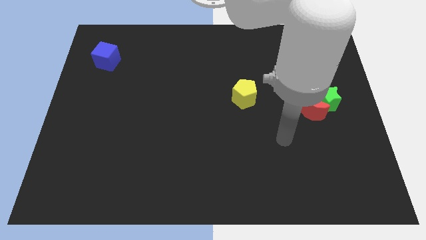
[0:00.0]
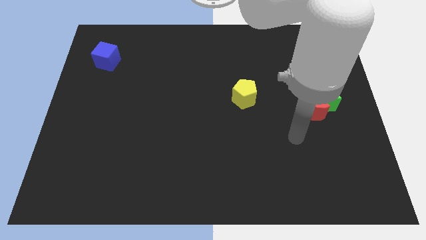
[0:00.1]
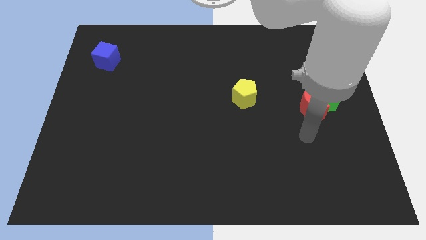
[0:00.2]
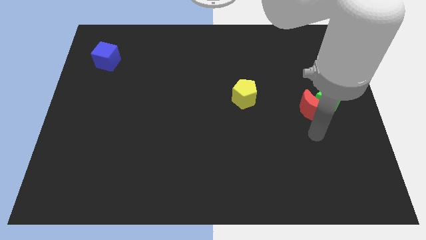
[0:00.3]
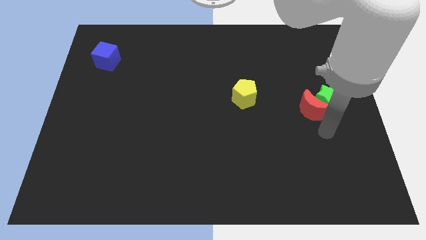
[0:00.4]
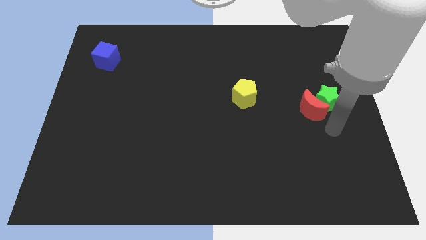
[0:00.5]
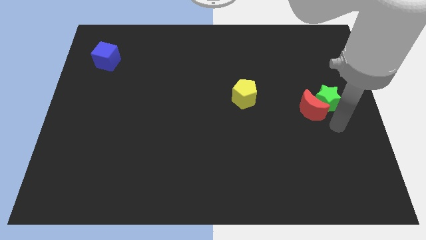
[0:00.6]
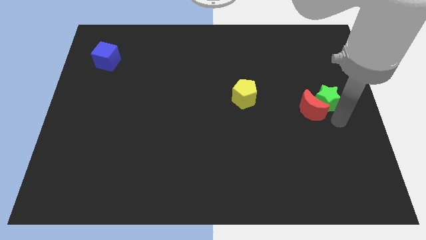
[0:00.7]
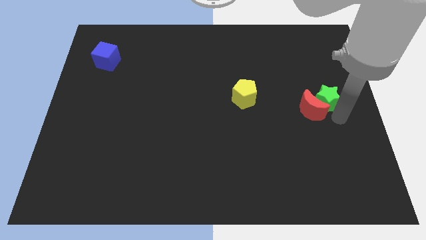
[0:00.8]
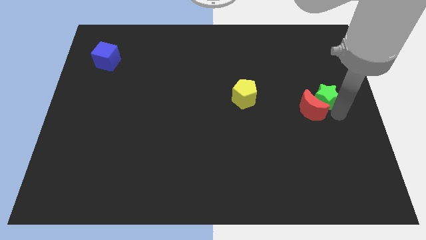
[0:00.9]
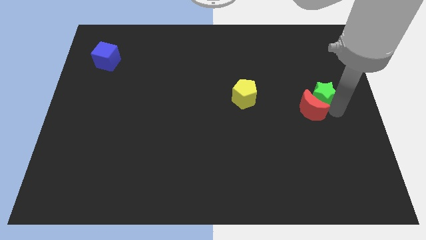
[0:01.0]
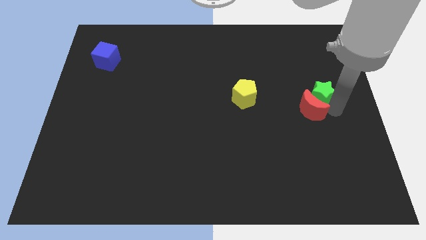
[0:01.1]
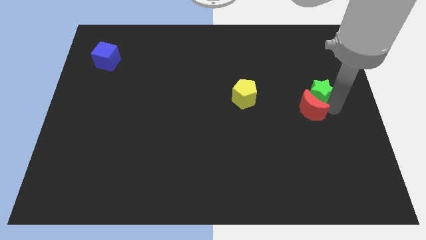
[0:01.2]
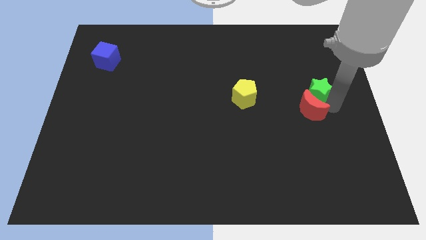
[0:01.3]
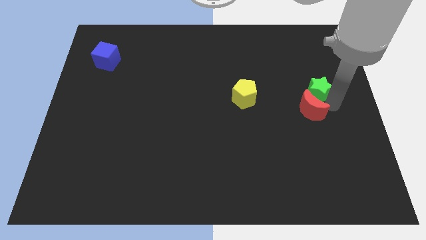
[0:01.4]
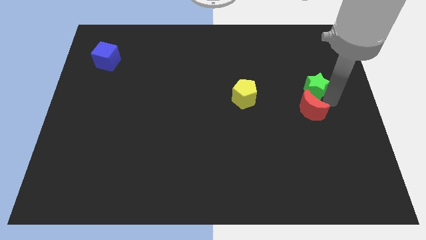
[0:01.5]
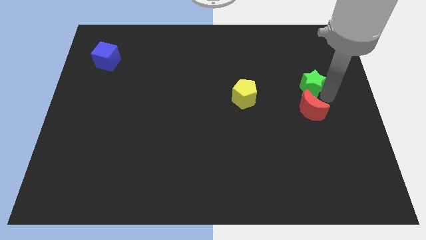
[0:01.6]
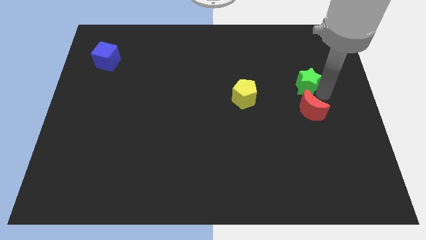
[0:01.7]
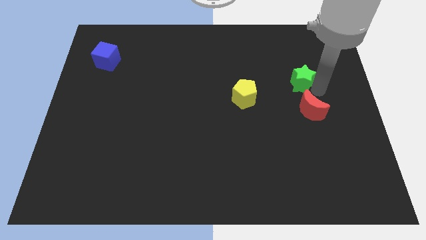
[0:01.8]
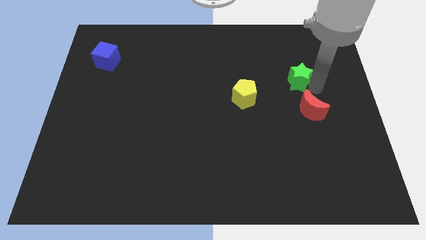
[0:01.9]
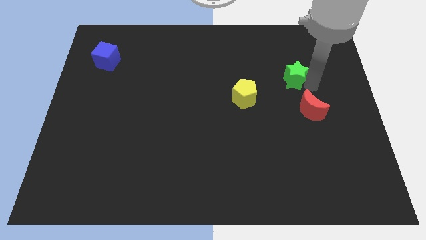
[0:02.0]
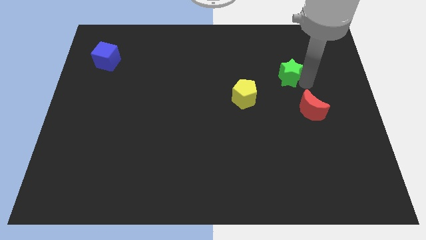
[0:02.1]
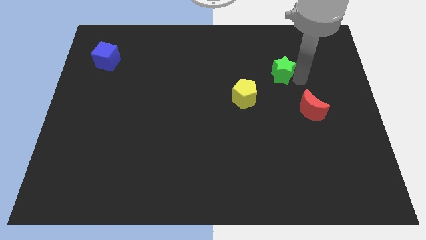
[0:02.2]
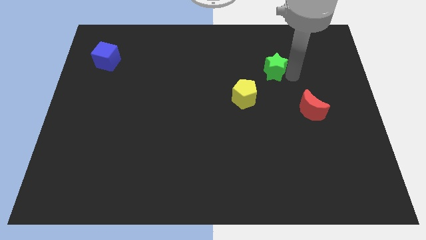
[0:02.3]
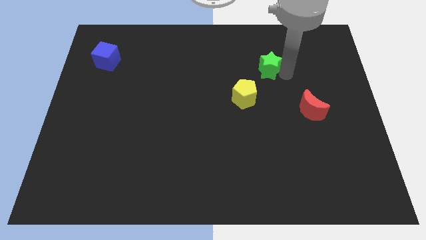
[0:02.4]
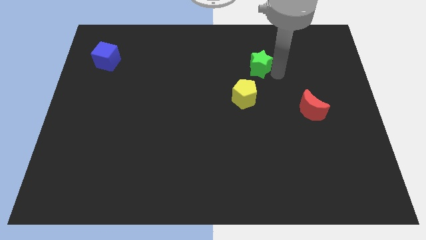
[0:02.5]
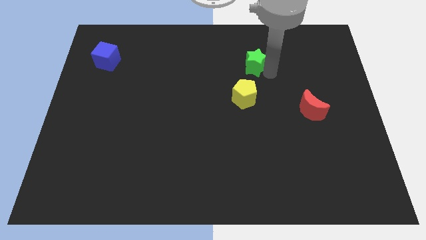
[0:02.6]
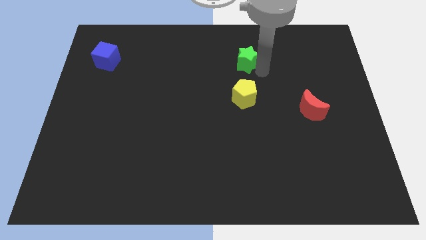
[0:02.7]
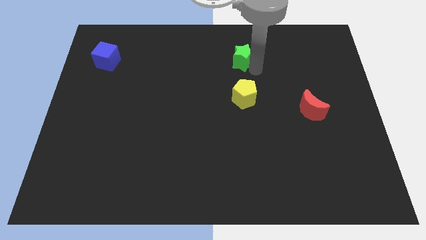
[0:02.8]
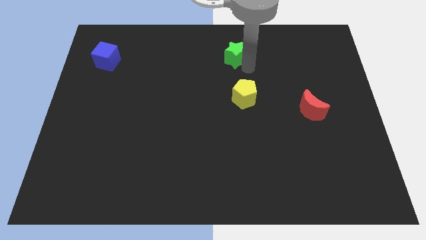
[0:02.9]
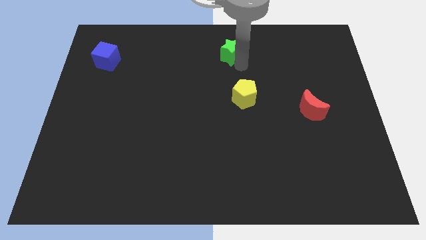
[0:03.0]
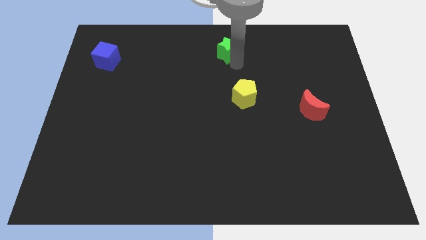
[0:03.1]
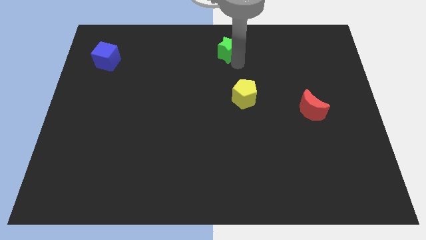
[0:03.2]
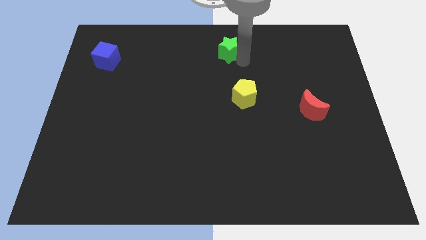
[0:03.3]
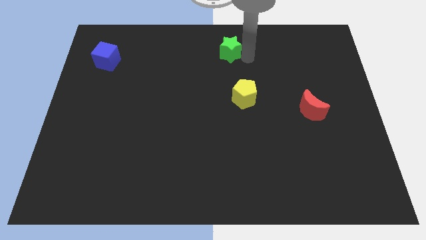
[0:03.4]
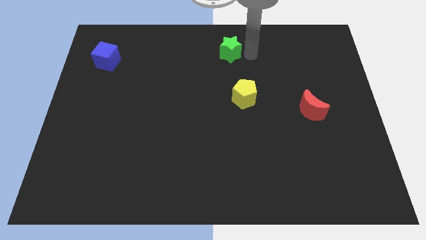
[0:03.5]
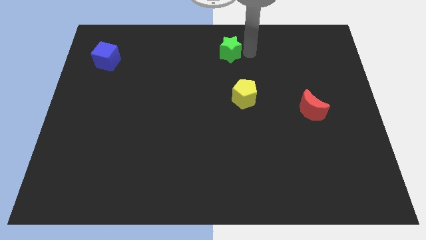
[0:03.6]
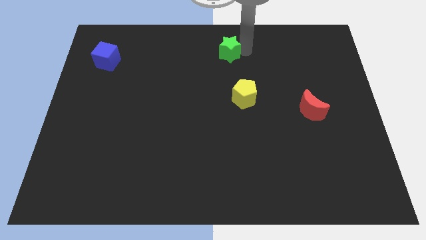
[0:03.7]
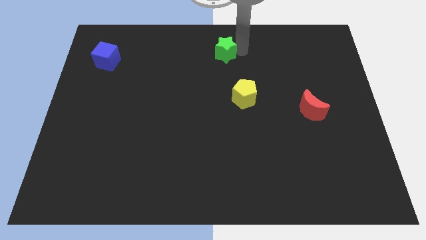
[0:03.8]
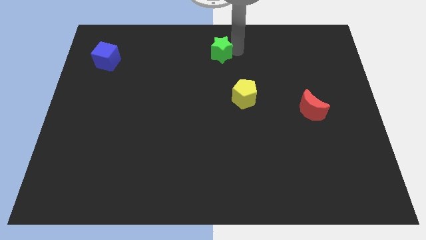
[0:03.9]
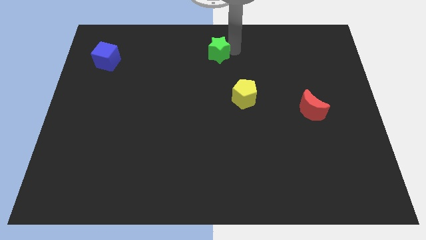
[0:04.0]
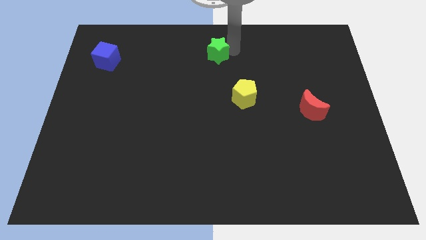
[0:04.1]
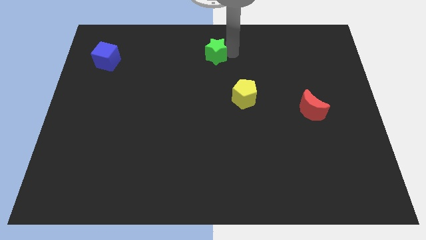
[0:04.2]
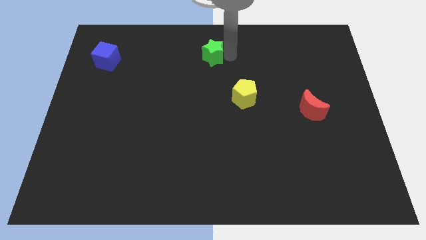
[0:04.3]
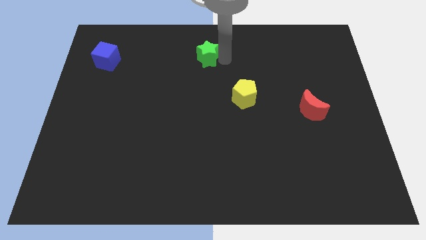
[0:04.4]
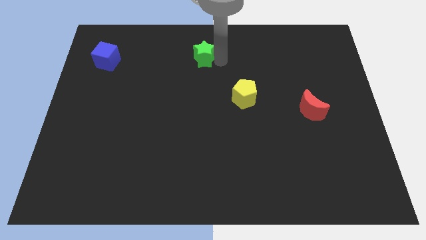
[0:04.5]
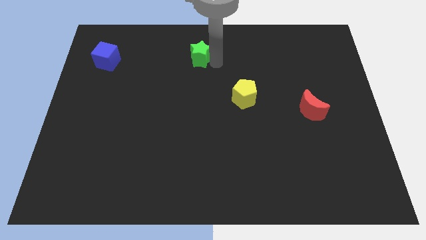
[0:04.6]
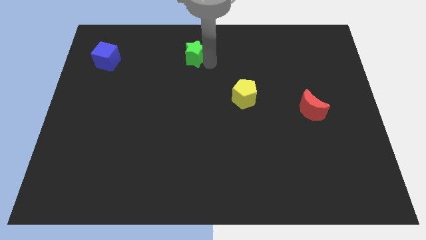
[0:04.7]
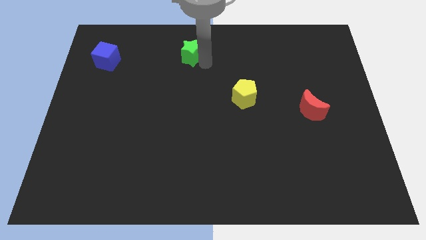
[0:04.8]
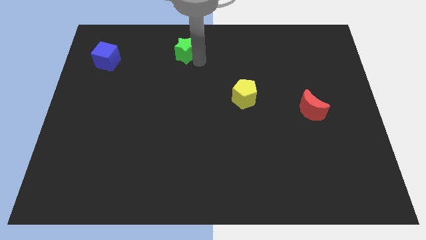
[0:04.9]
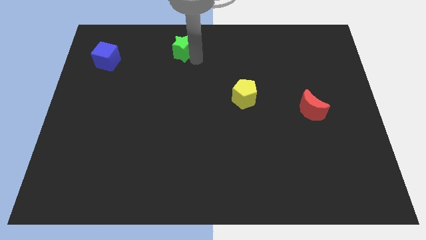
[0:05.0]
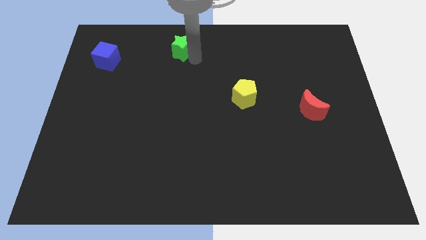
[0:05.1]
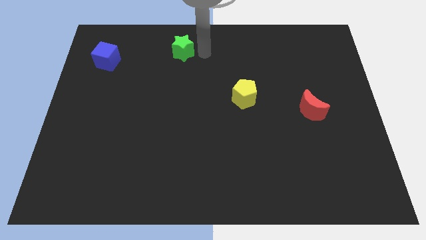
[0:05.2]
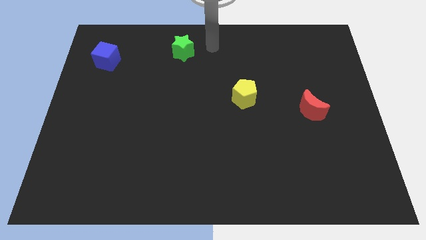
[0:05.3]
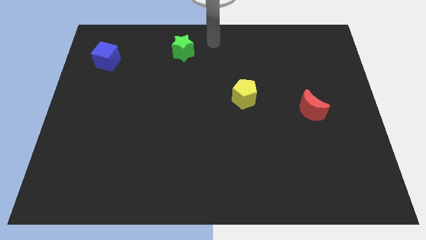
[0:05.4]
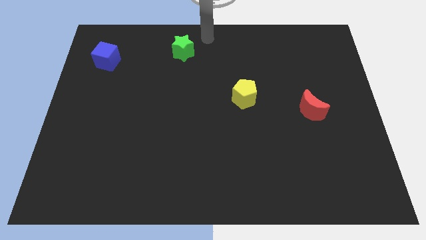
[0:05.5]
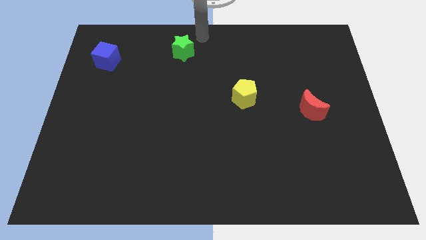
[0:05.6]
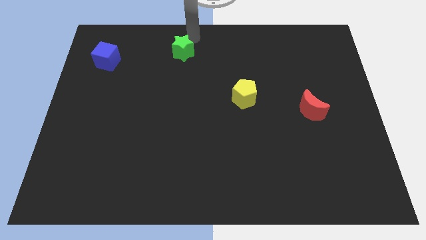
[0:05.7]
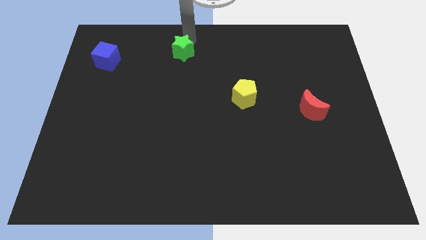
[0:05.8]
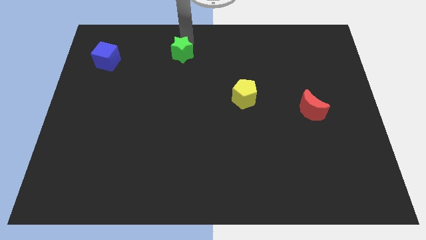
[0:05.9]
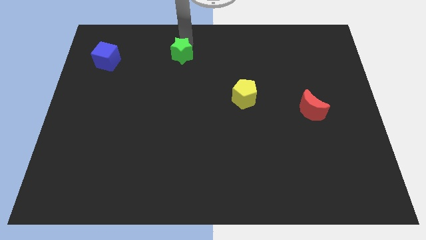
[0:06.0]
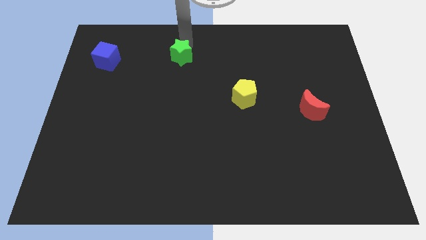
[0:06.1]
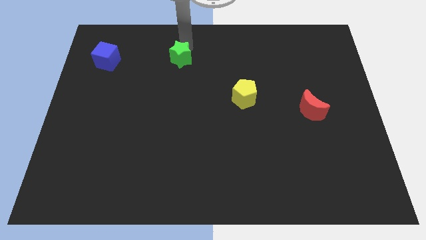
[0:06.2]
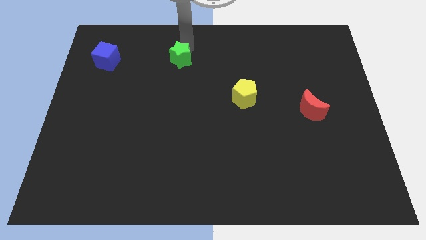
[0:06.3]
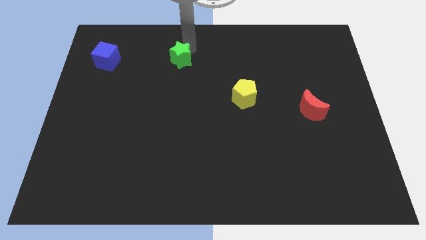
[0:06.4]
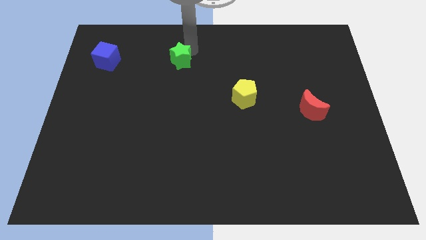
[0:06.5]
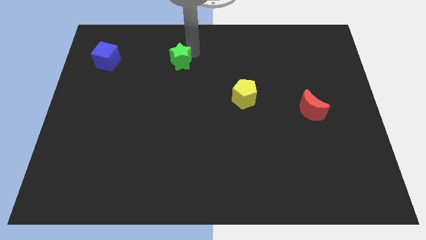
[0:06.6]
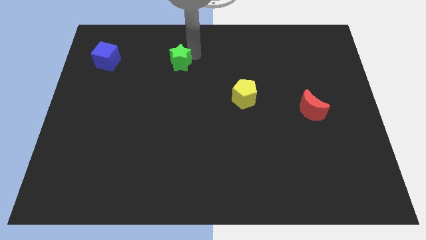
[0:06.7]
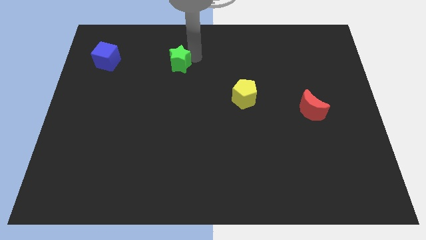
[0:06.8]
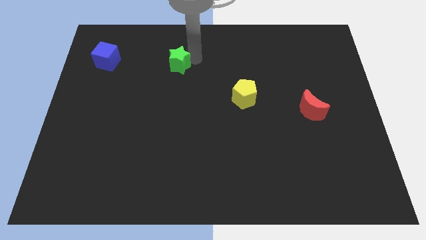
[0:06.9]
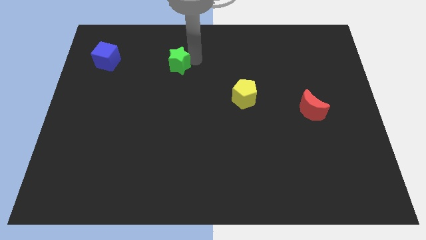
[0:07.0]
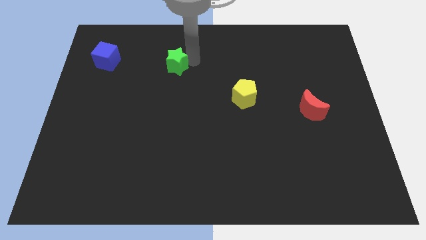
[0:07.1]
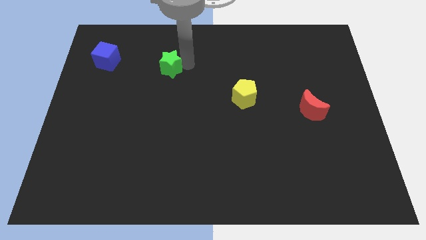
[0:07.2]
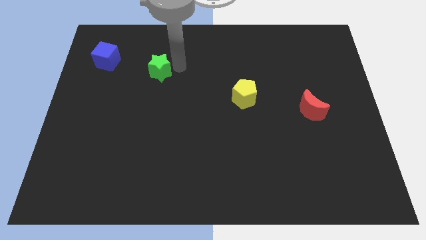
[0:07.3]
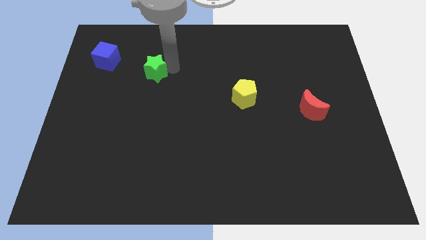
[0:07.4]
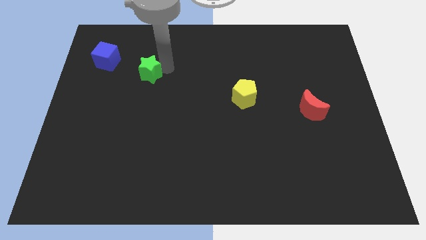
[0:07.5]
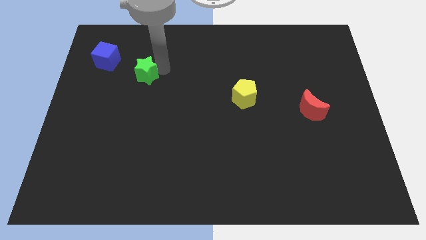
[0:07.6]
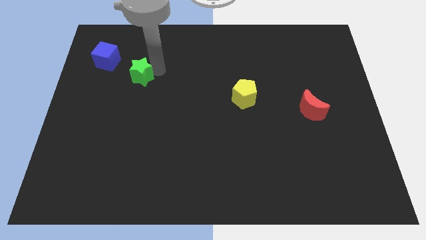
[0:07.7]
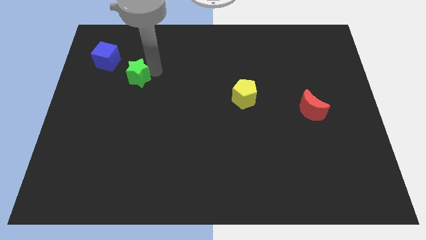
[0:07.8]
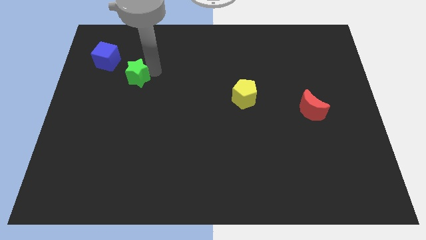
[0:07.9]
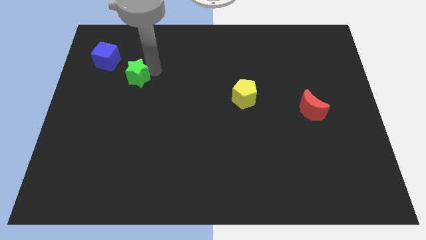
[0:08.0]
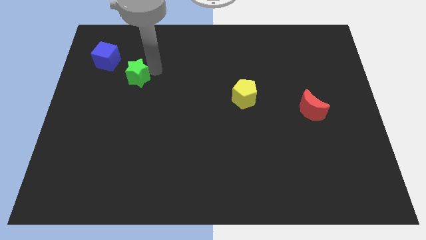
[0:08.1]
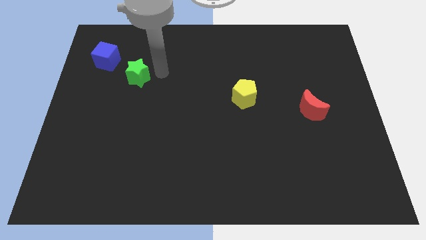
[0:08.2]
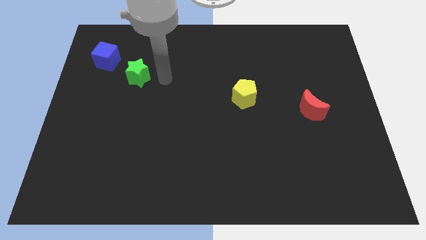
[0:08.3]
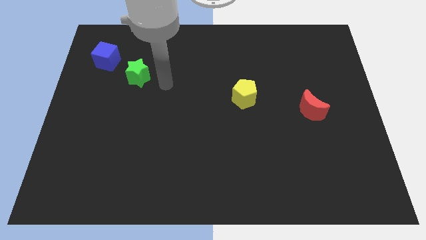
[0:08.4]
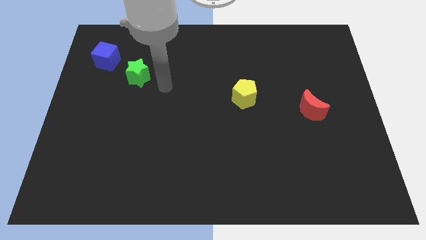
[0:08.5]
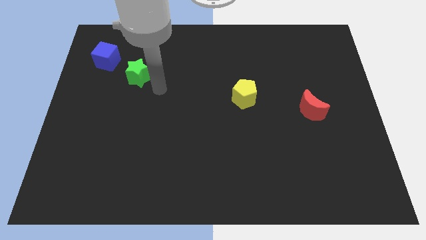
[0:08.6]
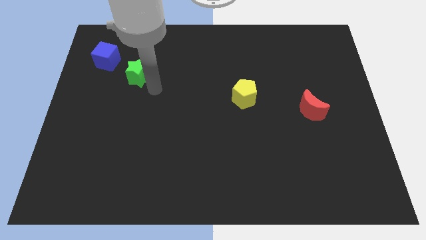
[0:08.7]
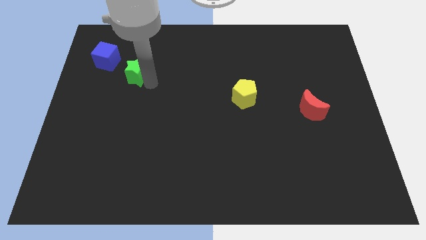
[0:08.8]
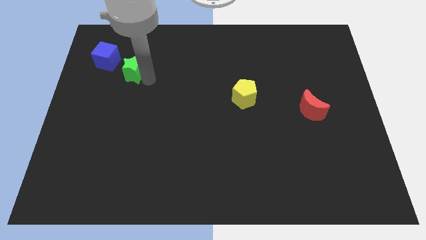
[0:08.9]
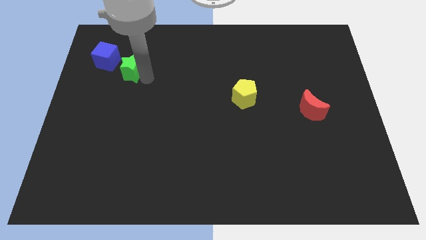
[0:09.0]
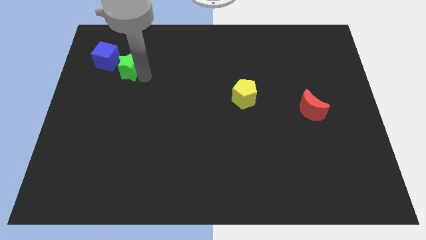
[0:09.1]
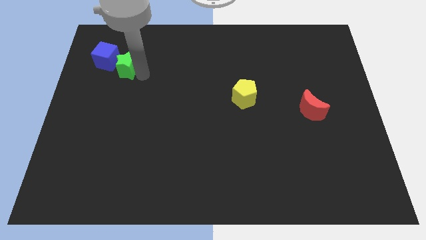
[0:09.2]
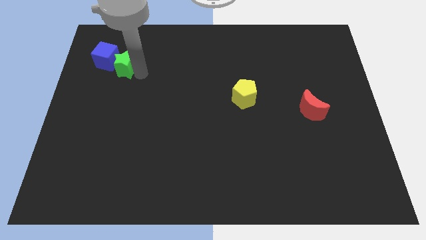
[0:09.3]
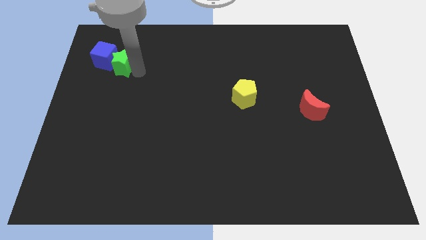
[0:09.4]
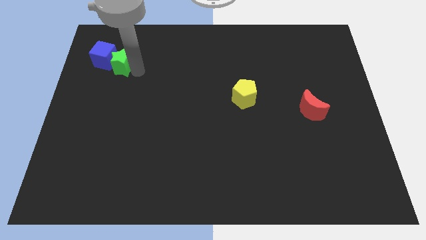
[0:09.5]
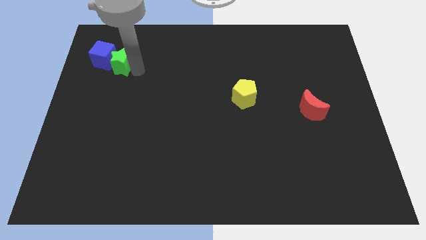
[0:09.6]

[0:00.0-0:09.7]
push the green block next to the blue block
